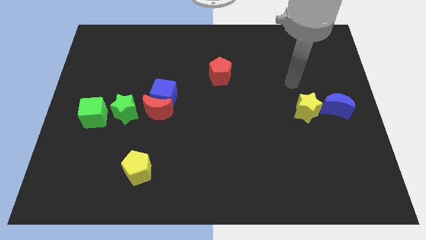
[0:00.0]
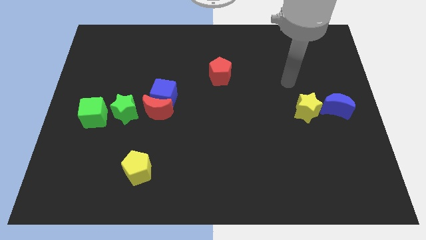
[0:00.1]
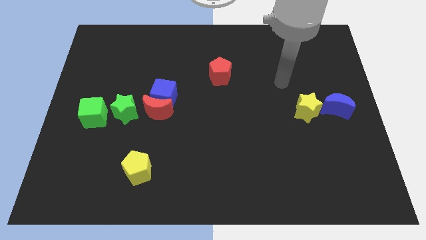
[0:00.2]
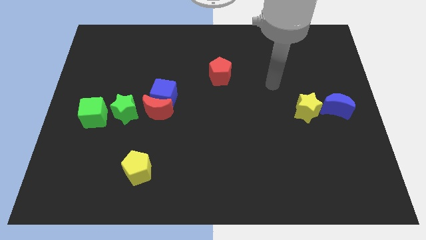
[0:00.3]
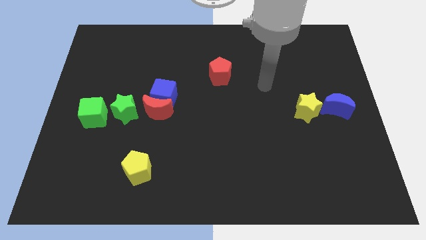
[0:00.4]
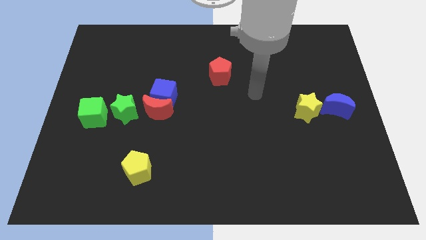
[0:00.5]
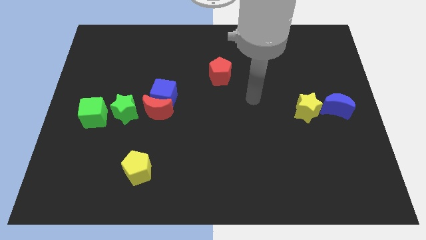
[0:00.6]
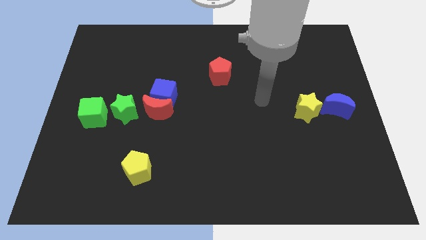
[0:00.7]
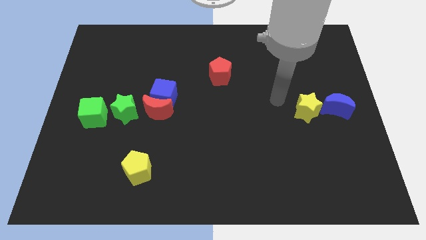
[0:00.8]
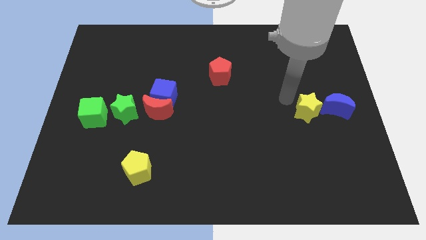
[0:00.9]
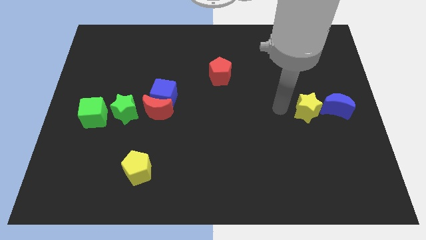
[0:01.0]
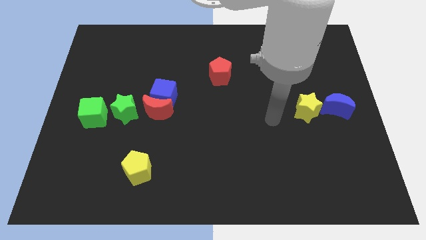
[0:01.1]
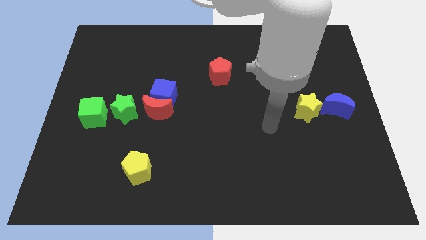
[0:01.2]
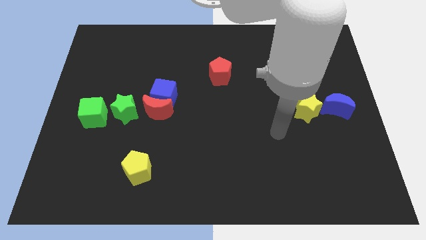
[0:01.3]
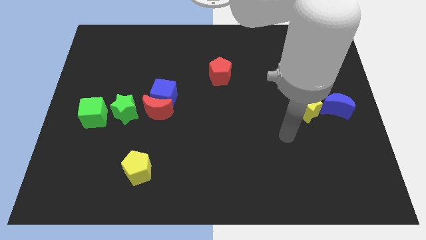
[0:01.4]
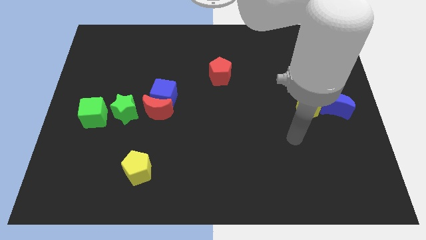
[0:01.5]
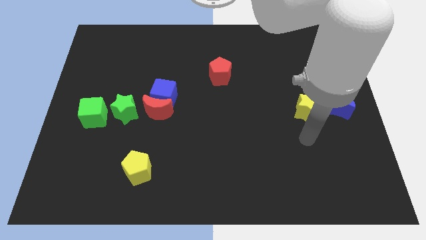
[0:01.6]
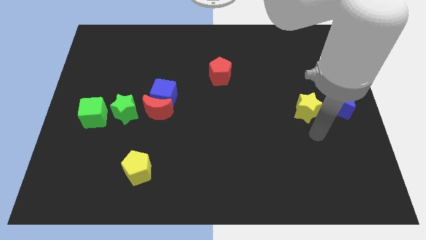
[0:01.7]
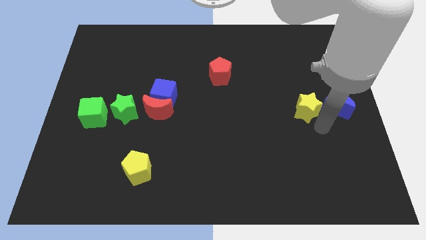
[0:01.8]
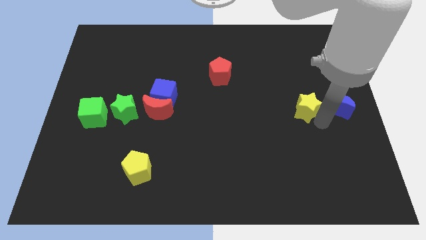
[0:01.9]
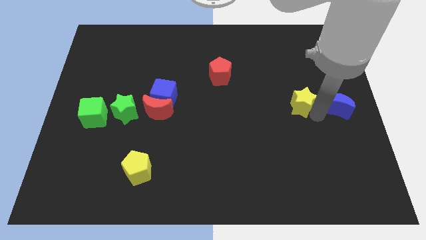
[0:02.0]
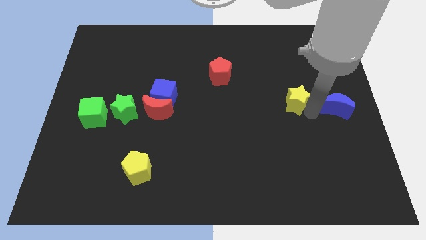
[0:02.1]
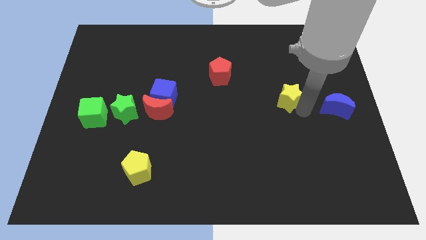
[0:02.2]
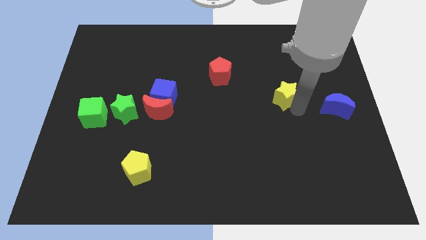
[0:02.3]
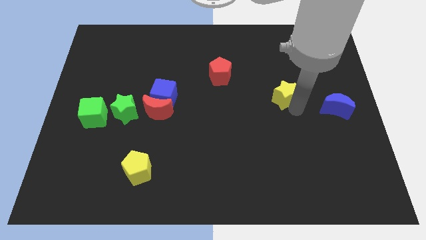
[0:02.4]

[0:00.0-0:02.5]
separate the yellow star from the blue moon

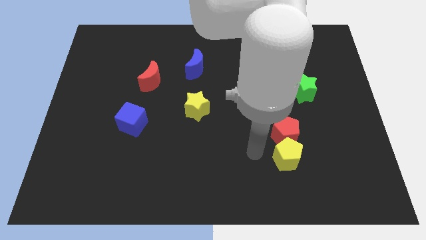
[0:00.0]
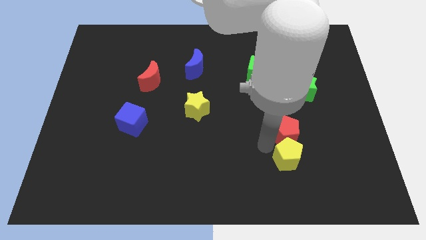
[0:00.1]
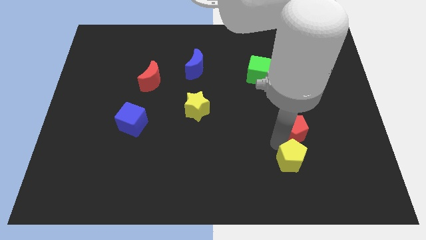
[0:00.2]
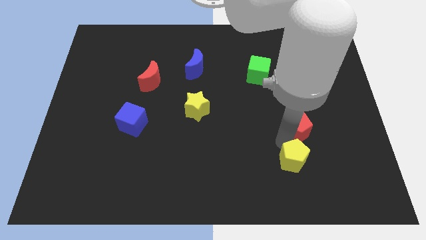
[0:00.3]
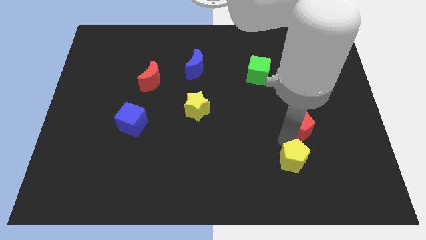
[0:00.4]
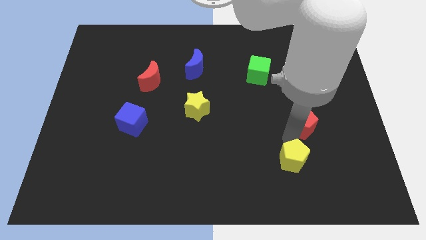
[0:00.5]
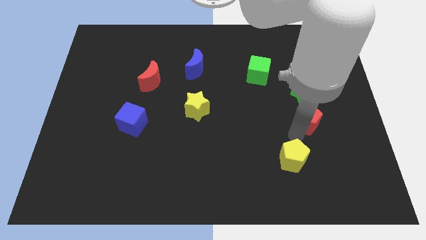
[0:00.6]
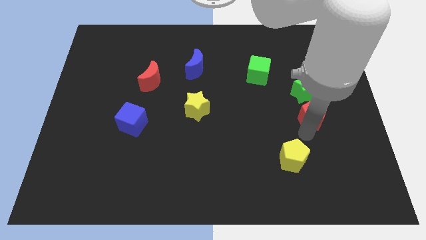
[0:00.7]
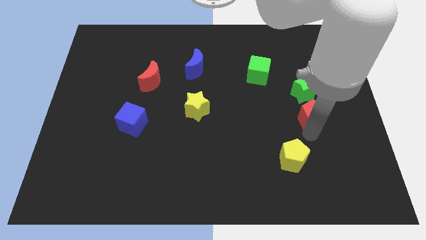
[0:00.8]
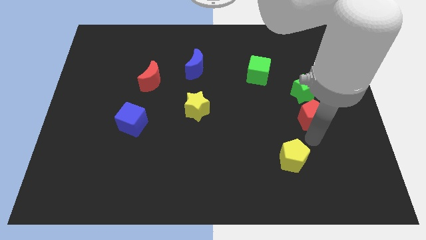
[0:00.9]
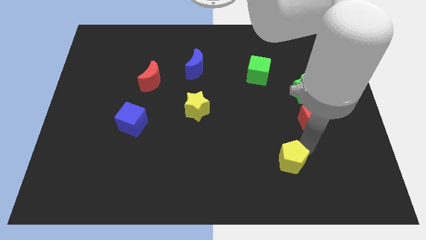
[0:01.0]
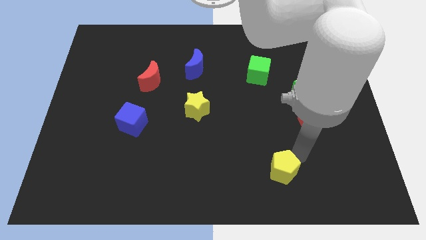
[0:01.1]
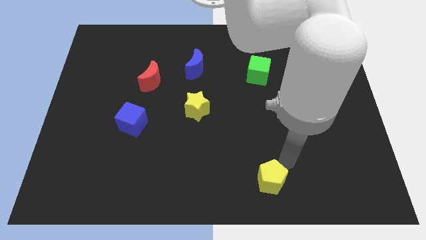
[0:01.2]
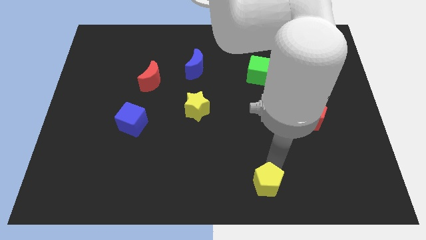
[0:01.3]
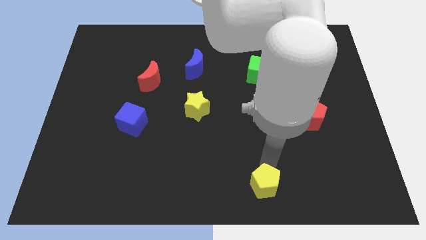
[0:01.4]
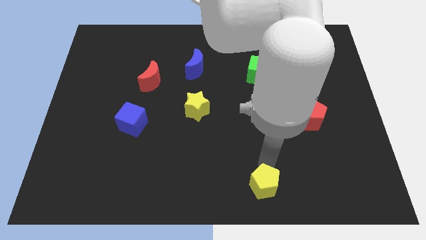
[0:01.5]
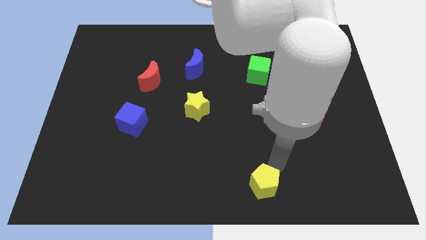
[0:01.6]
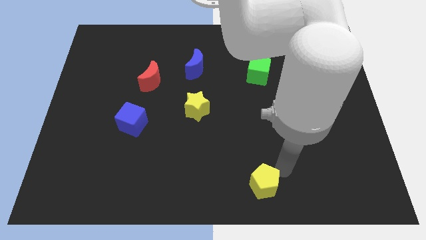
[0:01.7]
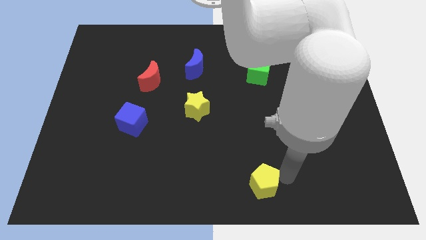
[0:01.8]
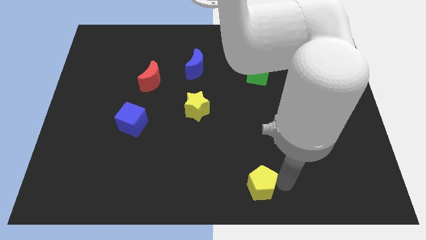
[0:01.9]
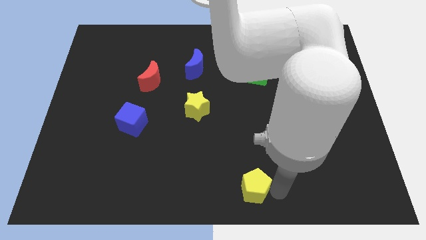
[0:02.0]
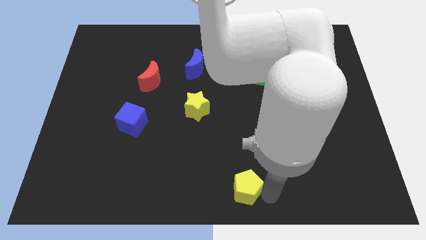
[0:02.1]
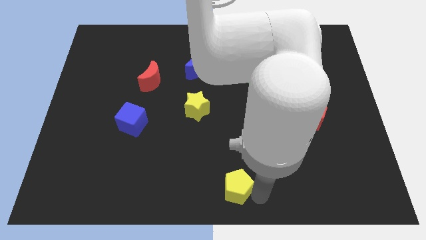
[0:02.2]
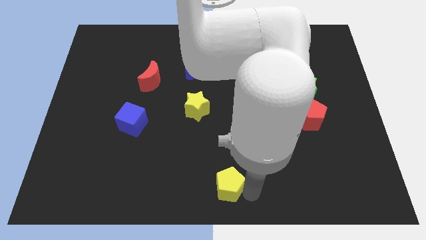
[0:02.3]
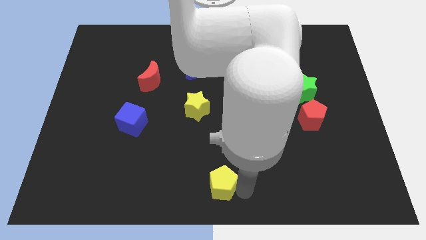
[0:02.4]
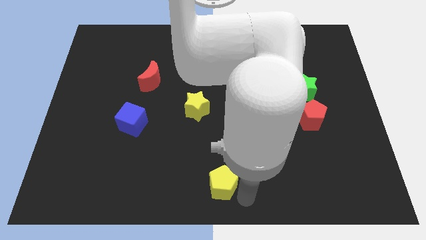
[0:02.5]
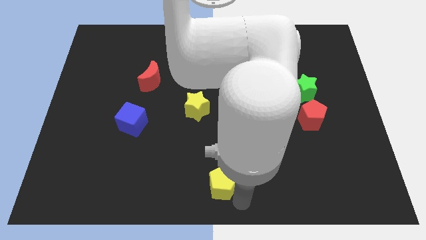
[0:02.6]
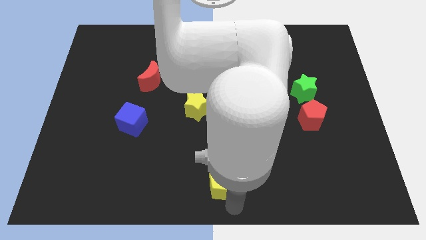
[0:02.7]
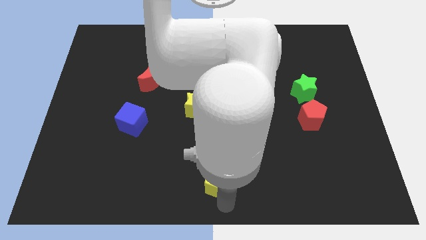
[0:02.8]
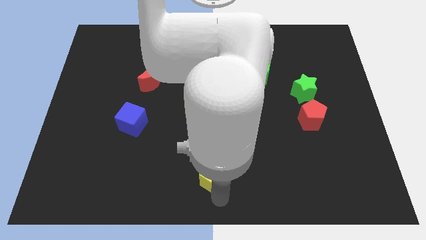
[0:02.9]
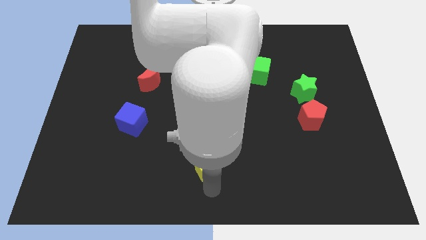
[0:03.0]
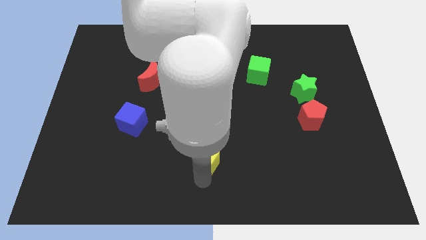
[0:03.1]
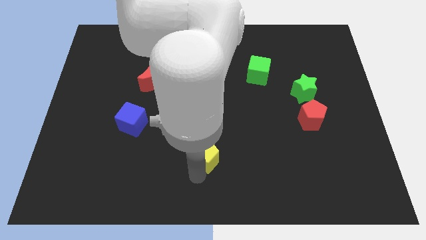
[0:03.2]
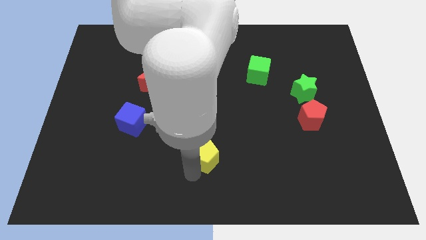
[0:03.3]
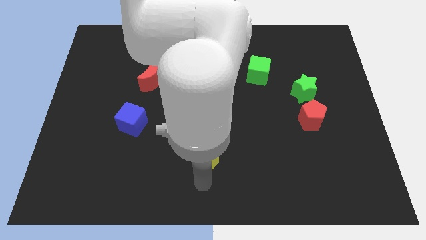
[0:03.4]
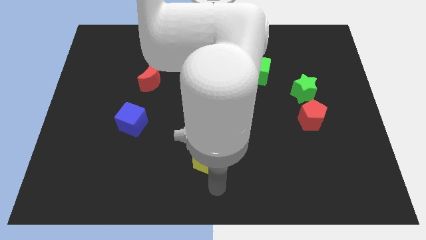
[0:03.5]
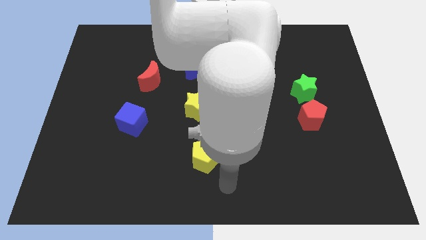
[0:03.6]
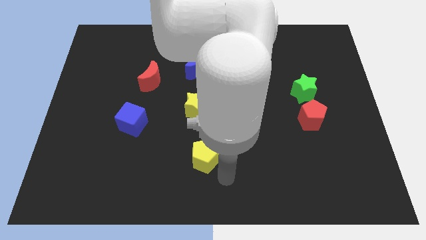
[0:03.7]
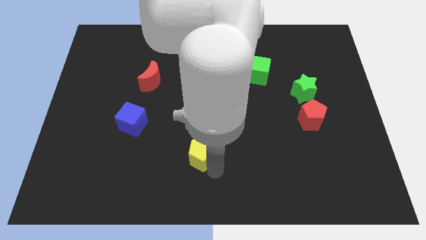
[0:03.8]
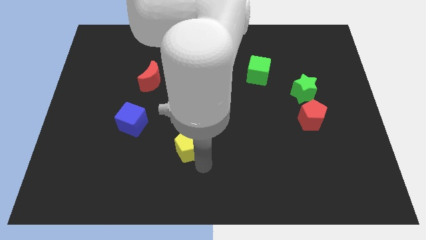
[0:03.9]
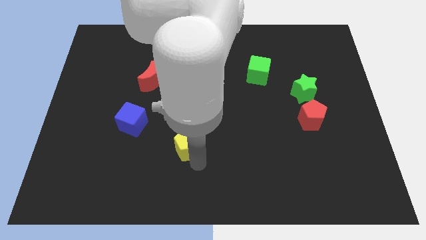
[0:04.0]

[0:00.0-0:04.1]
separate the yellow pentagon from the red pentagon

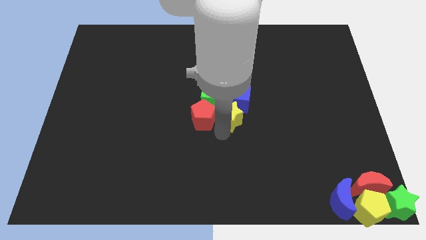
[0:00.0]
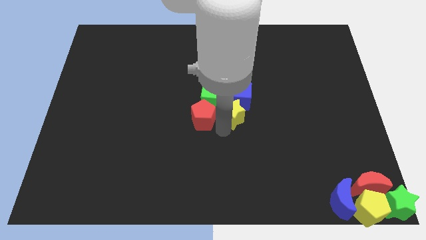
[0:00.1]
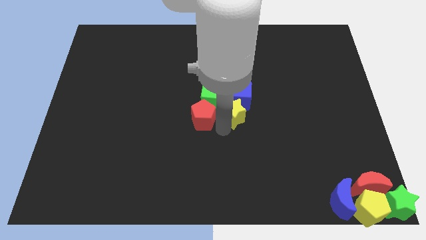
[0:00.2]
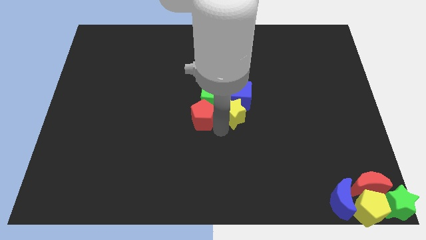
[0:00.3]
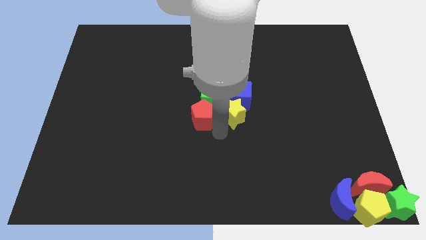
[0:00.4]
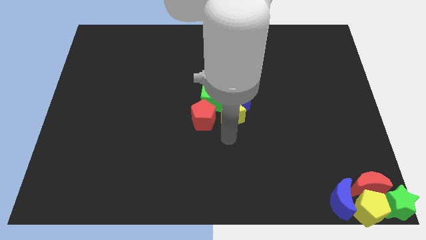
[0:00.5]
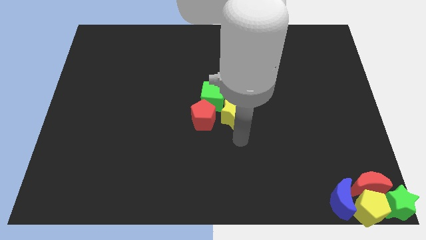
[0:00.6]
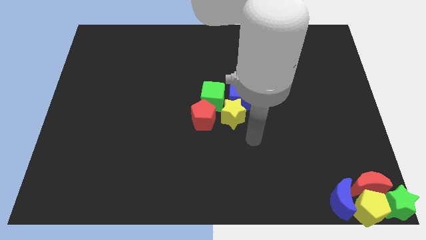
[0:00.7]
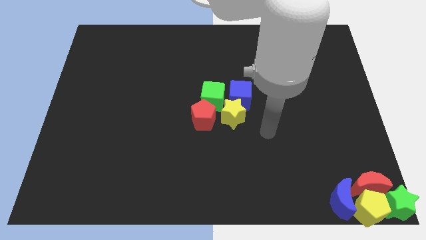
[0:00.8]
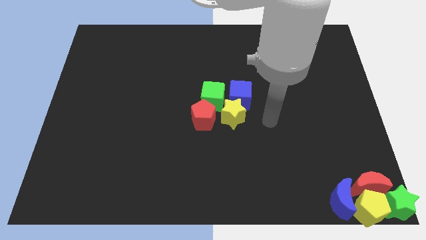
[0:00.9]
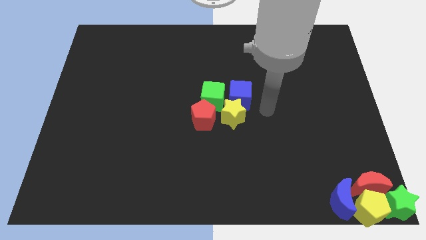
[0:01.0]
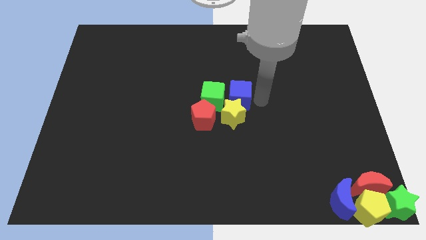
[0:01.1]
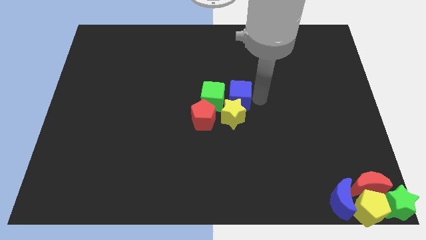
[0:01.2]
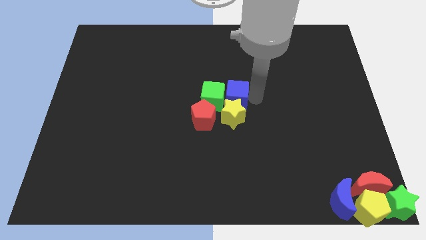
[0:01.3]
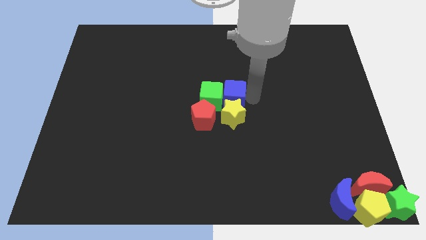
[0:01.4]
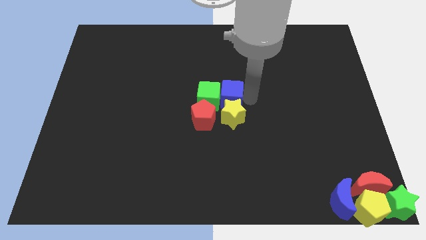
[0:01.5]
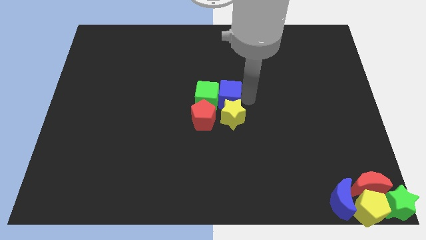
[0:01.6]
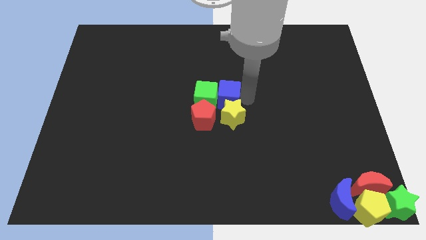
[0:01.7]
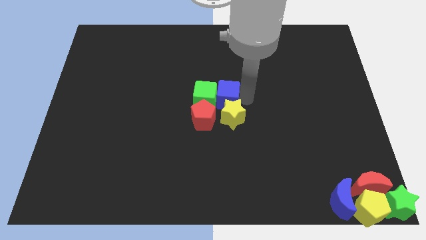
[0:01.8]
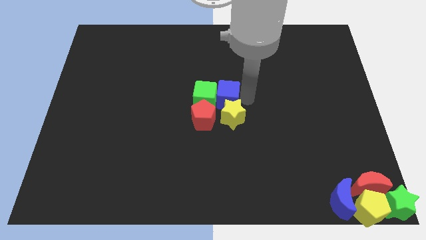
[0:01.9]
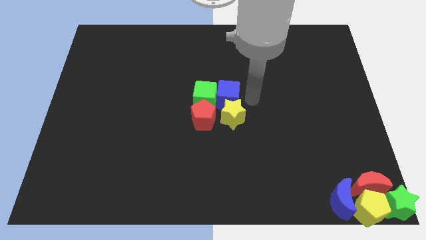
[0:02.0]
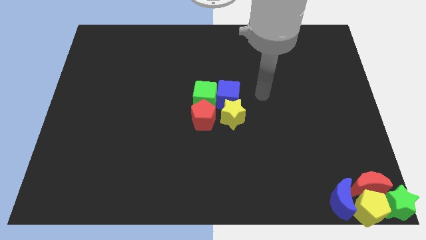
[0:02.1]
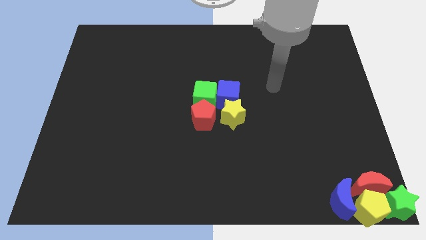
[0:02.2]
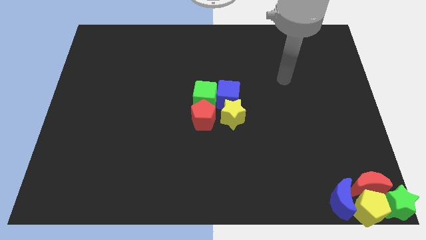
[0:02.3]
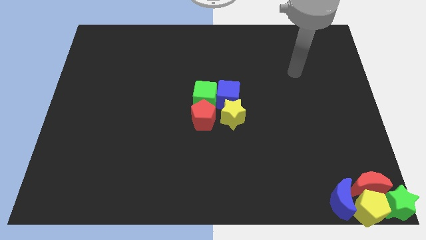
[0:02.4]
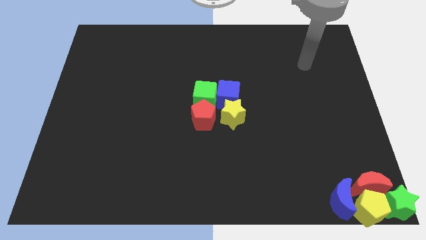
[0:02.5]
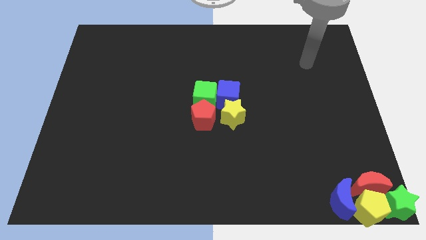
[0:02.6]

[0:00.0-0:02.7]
move the two cubes slightly left
